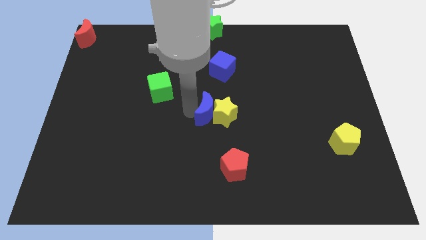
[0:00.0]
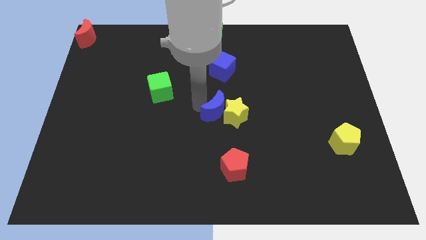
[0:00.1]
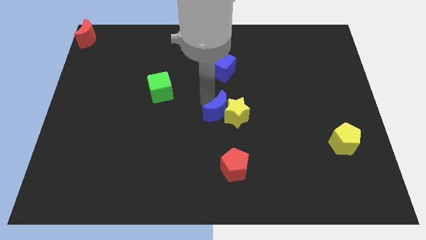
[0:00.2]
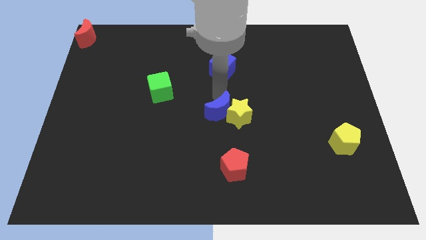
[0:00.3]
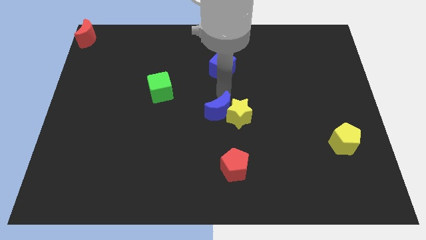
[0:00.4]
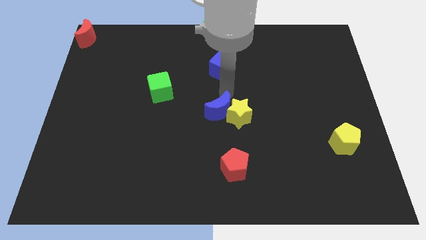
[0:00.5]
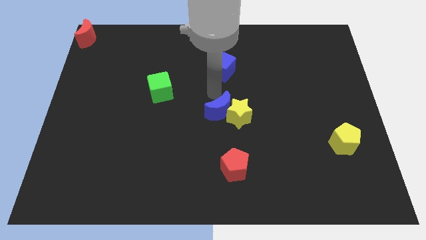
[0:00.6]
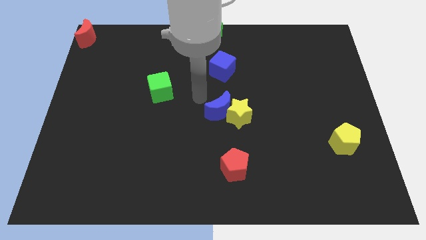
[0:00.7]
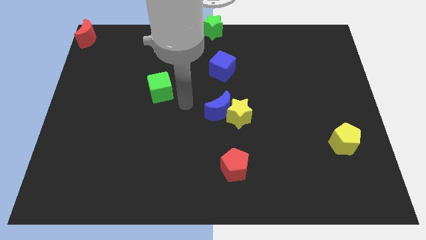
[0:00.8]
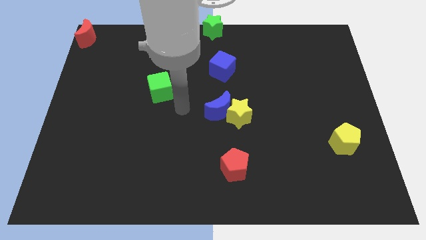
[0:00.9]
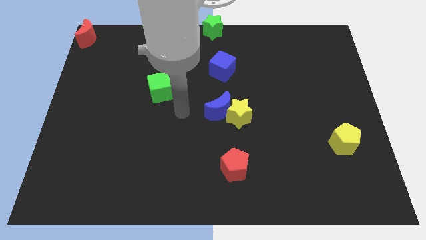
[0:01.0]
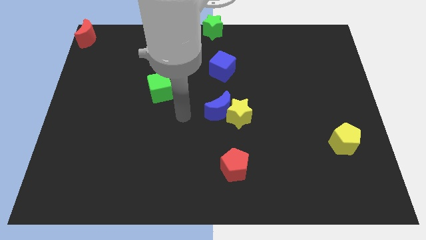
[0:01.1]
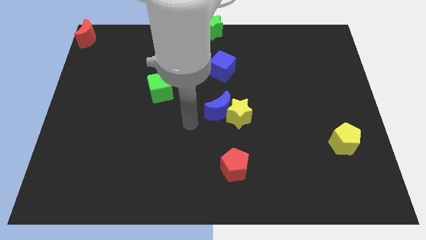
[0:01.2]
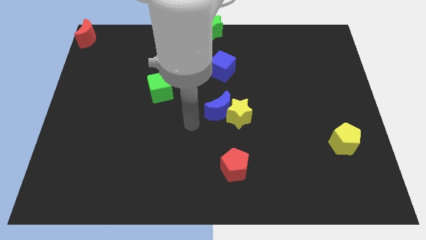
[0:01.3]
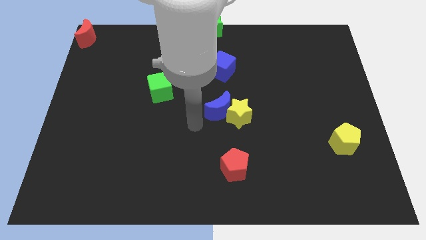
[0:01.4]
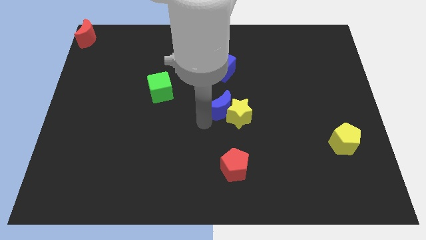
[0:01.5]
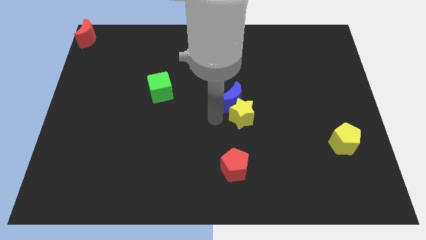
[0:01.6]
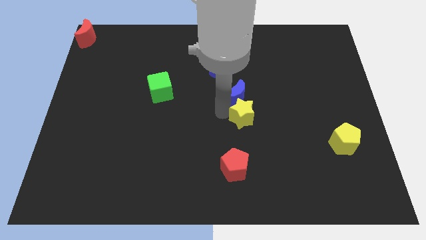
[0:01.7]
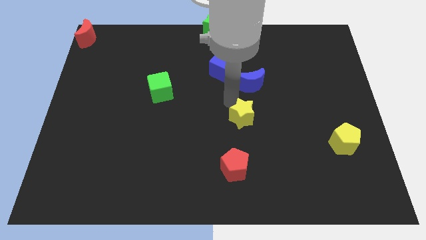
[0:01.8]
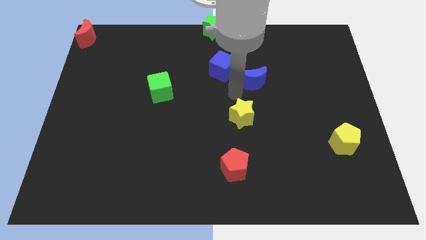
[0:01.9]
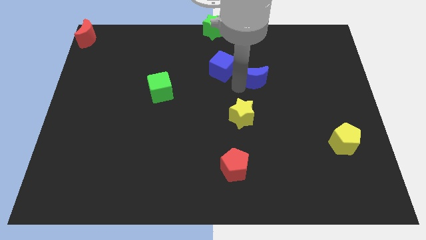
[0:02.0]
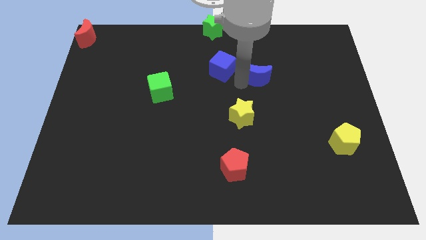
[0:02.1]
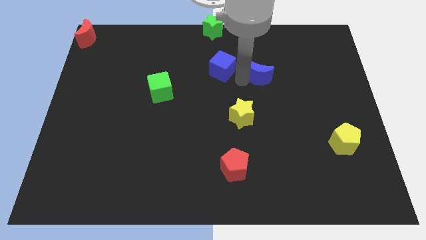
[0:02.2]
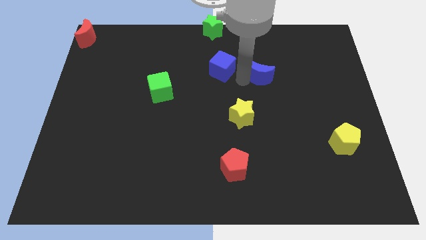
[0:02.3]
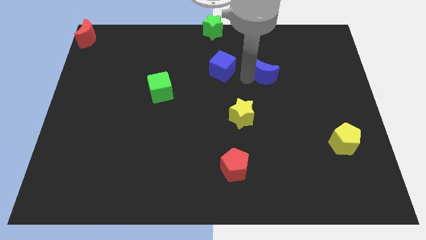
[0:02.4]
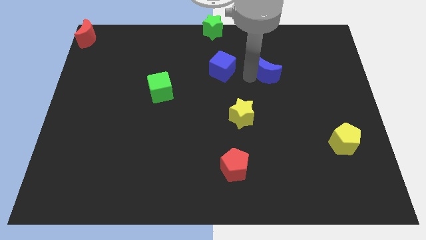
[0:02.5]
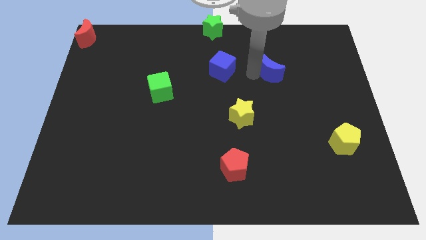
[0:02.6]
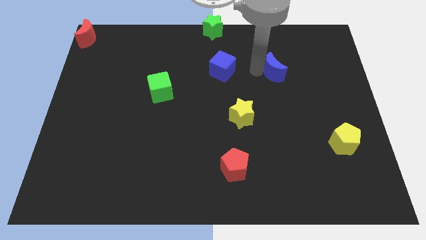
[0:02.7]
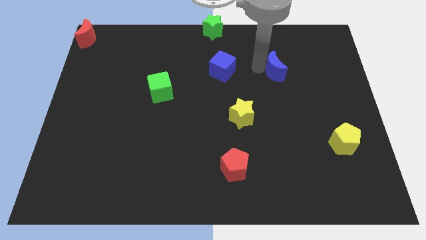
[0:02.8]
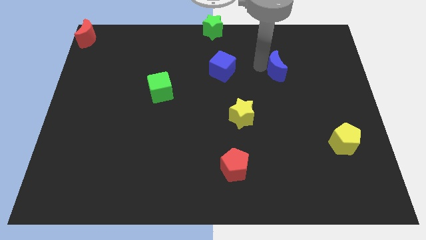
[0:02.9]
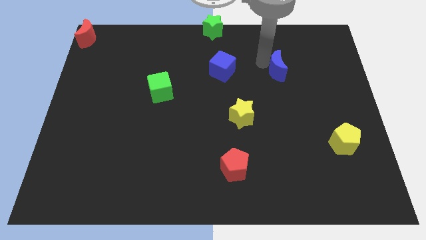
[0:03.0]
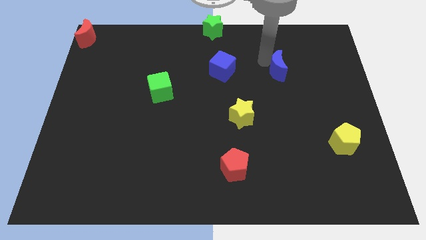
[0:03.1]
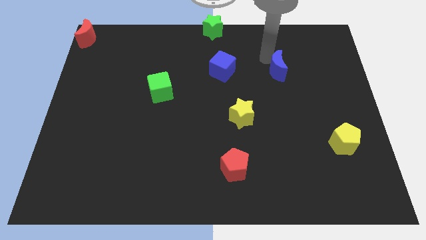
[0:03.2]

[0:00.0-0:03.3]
place blue moon adjacent to blue cube

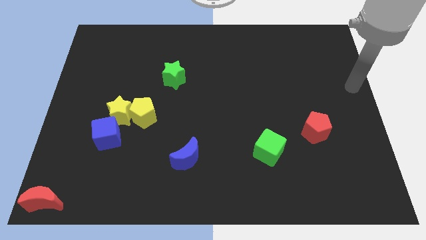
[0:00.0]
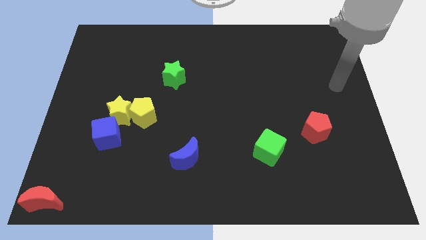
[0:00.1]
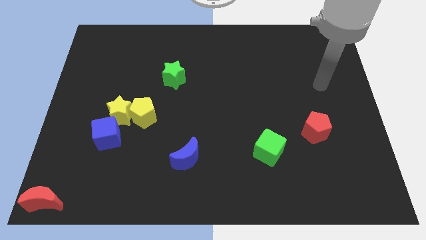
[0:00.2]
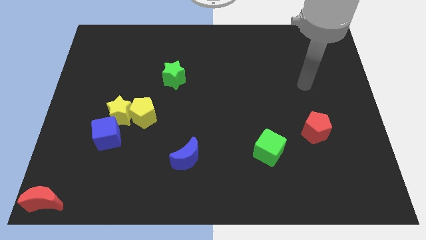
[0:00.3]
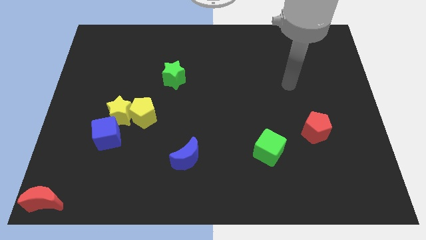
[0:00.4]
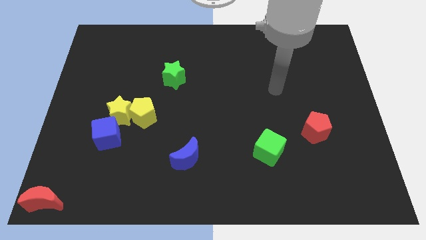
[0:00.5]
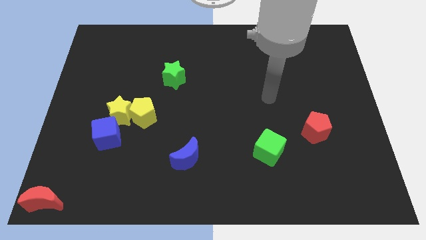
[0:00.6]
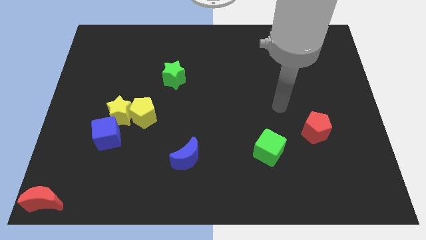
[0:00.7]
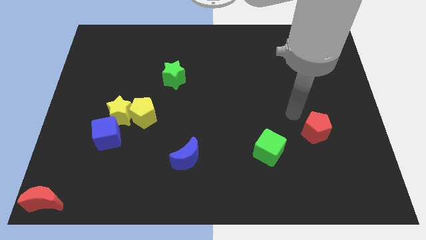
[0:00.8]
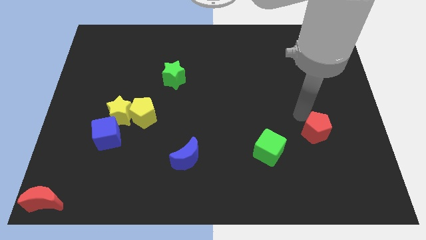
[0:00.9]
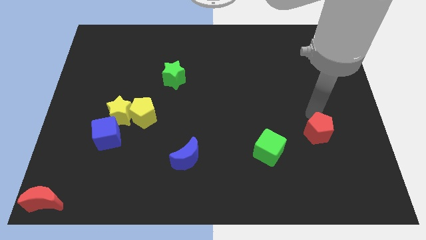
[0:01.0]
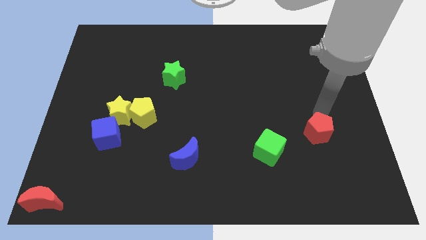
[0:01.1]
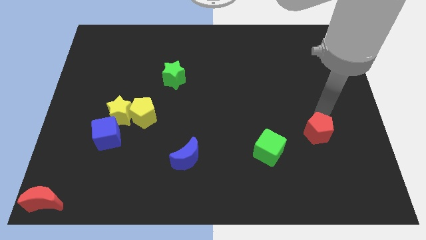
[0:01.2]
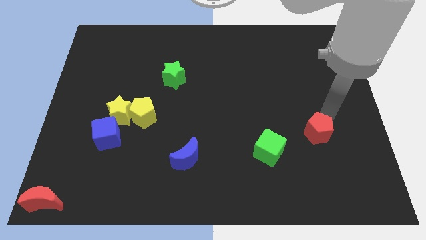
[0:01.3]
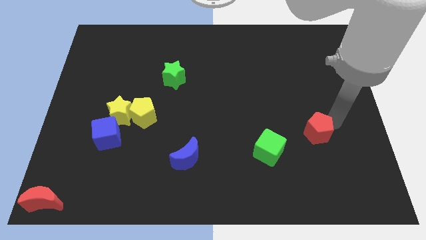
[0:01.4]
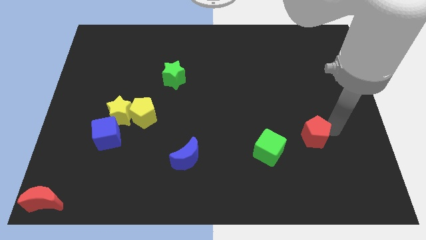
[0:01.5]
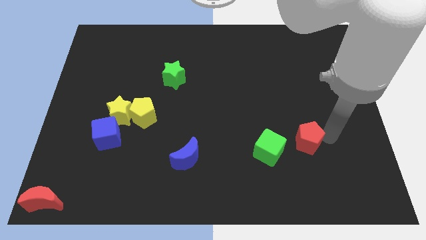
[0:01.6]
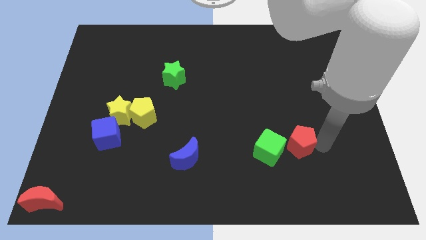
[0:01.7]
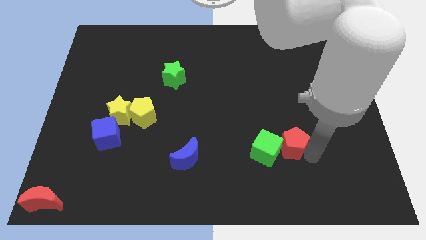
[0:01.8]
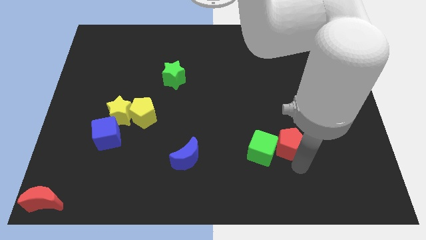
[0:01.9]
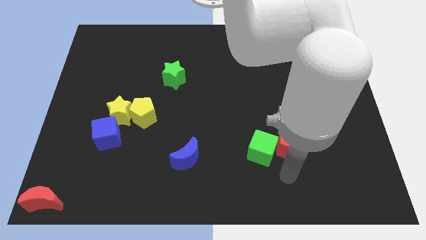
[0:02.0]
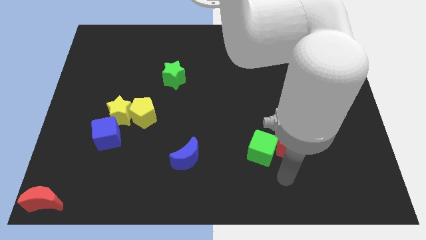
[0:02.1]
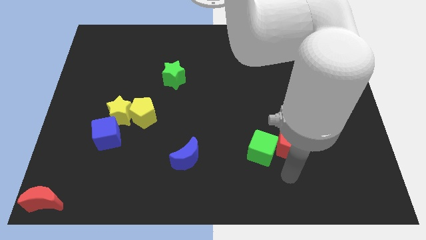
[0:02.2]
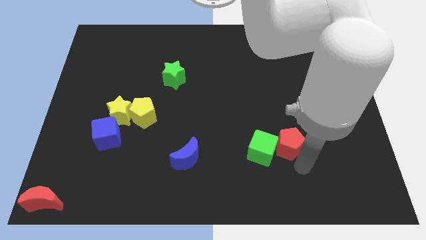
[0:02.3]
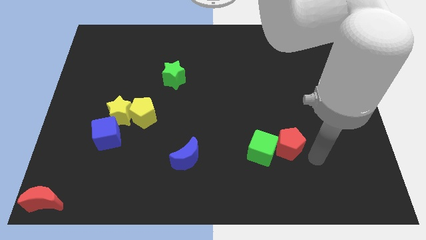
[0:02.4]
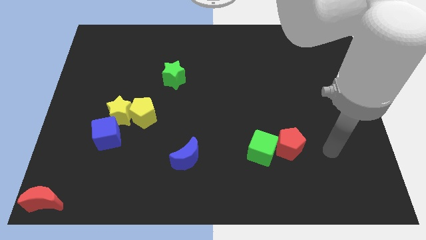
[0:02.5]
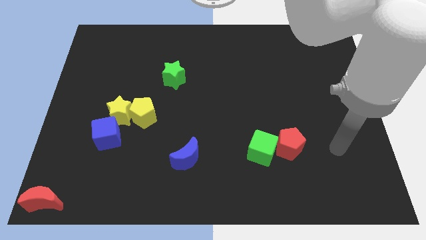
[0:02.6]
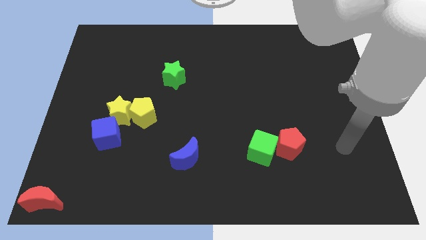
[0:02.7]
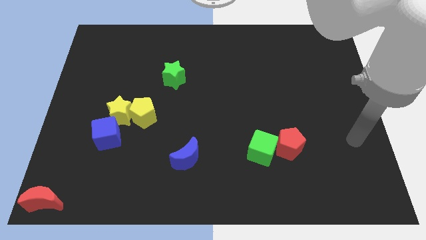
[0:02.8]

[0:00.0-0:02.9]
push the red pentagon into green cube

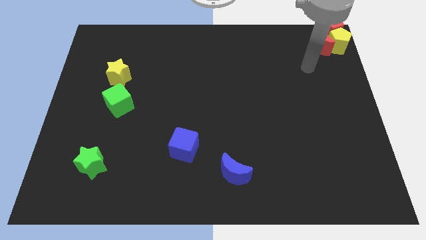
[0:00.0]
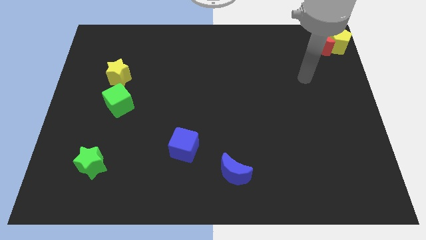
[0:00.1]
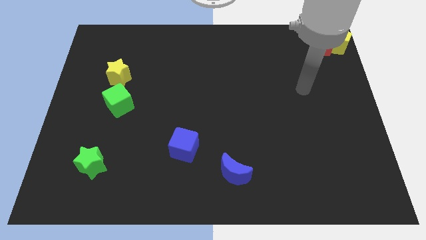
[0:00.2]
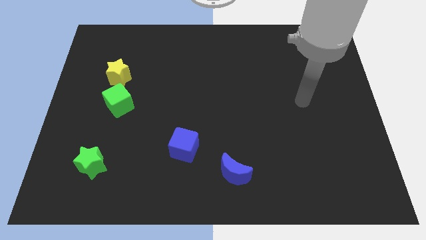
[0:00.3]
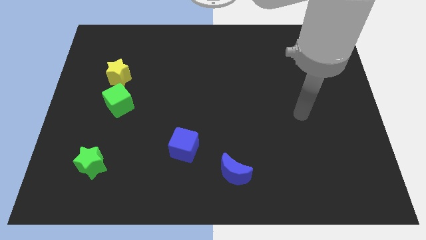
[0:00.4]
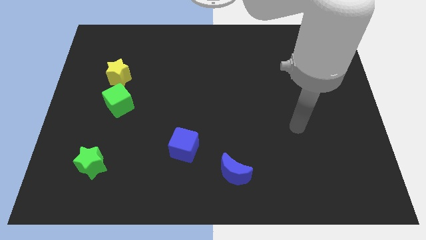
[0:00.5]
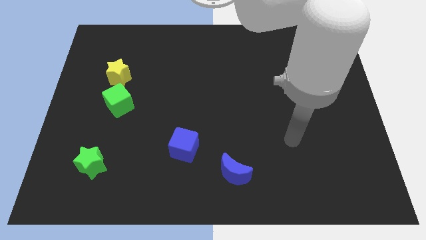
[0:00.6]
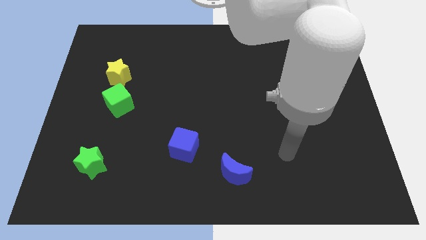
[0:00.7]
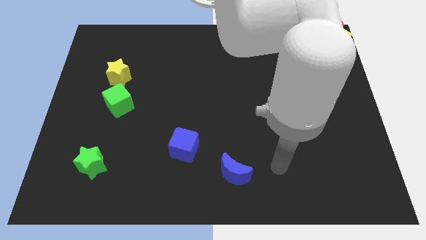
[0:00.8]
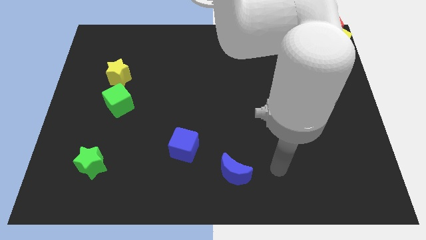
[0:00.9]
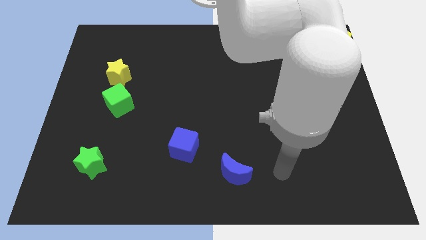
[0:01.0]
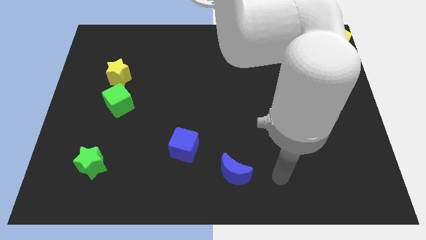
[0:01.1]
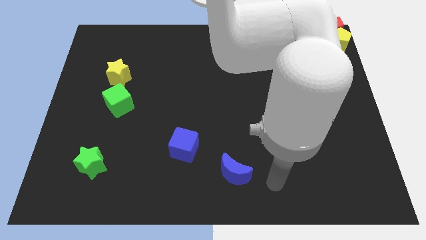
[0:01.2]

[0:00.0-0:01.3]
put your hand at the right side of the blue crescent

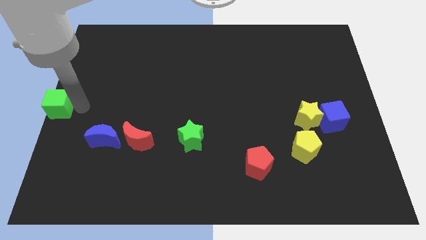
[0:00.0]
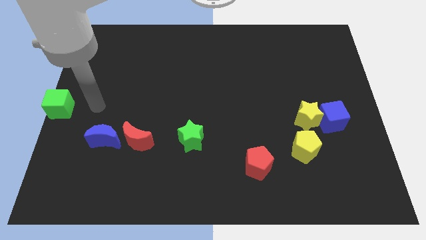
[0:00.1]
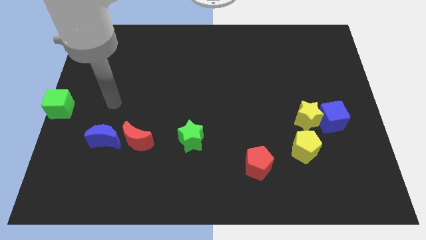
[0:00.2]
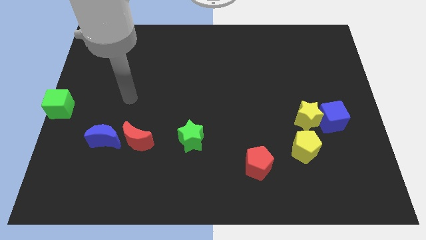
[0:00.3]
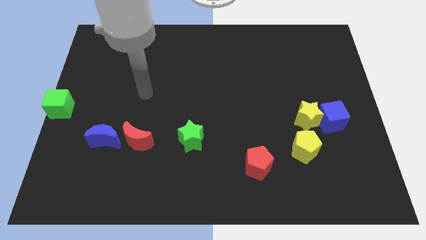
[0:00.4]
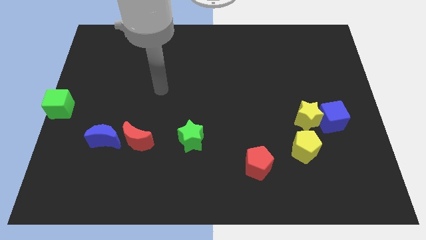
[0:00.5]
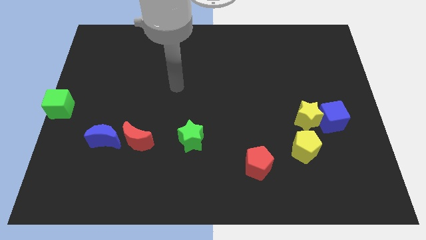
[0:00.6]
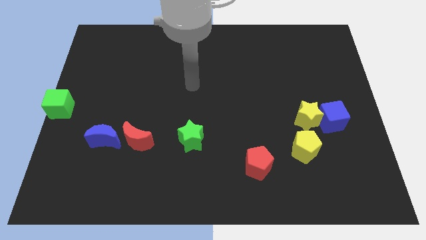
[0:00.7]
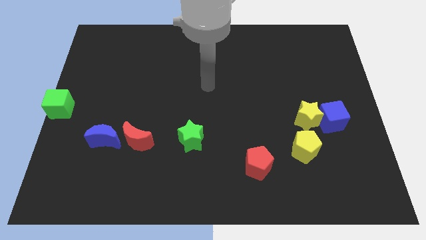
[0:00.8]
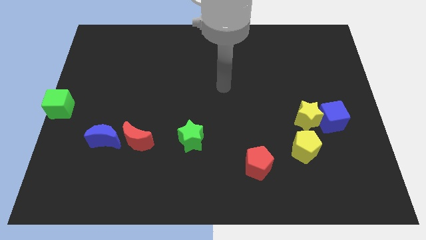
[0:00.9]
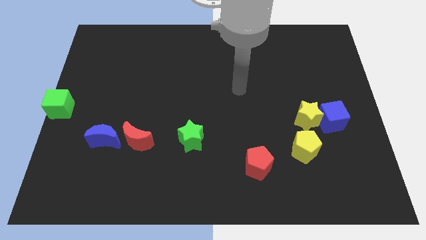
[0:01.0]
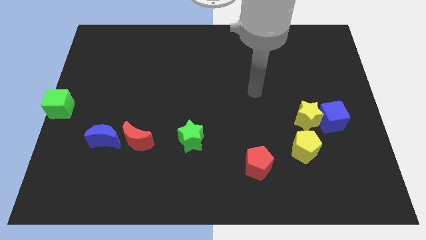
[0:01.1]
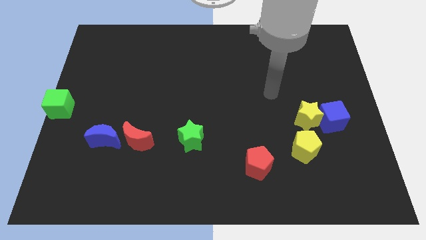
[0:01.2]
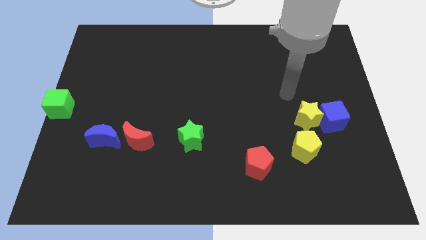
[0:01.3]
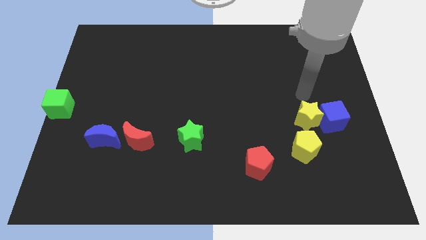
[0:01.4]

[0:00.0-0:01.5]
point your arm at the top of the yellow star
